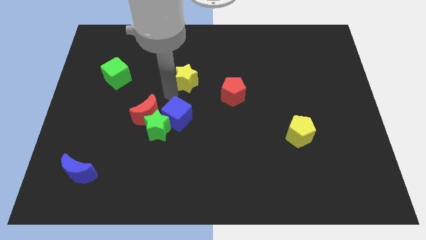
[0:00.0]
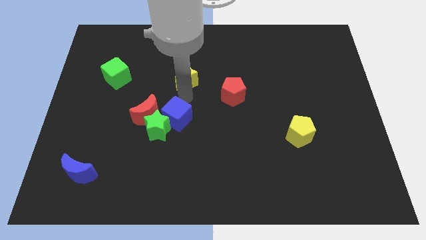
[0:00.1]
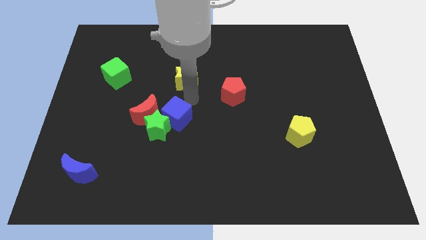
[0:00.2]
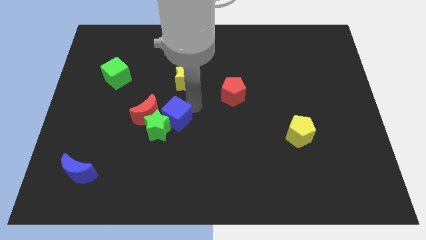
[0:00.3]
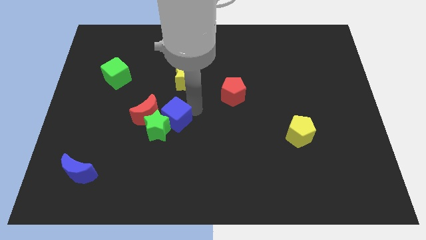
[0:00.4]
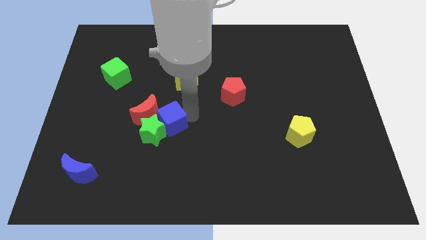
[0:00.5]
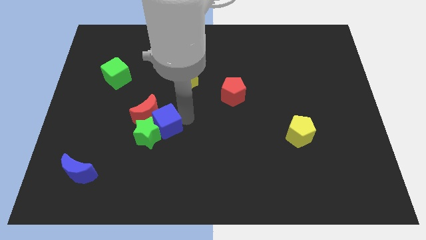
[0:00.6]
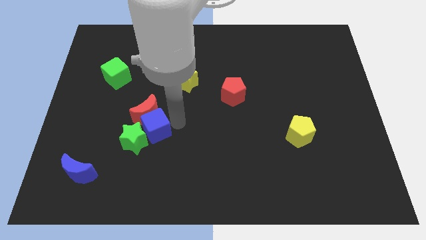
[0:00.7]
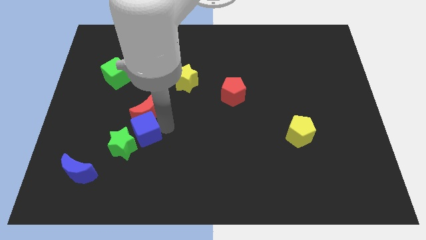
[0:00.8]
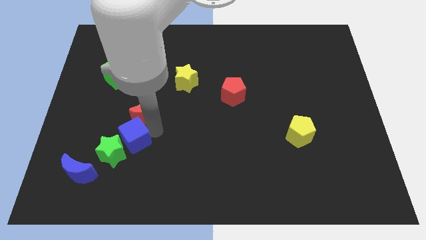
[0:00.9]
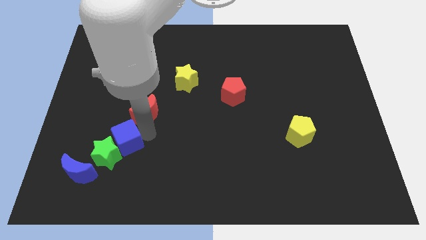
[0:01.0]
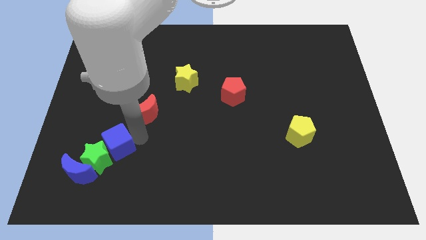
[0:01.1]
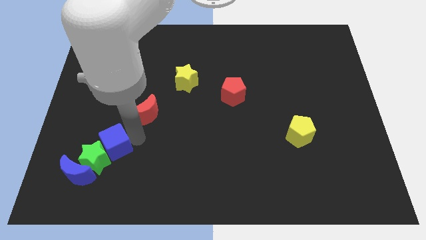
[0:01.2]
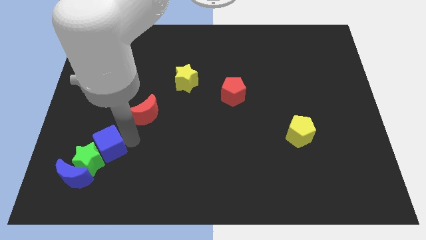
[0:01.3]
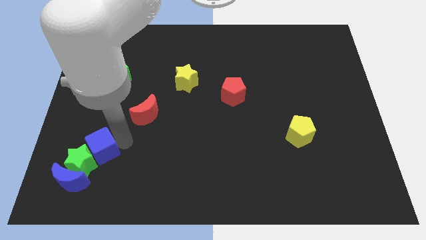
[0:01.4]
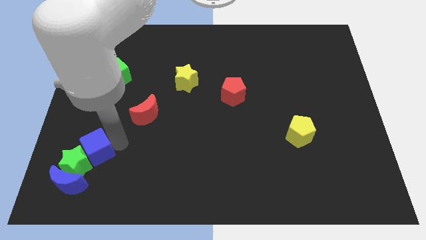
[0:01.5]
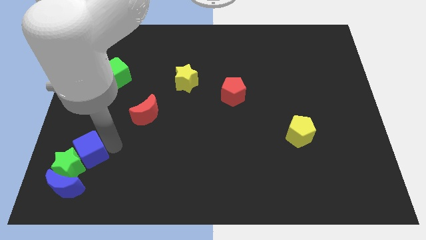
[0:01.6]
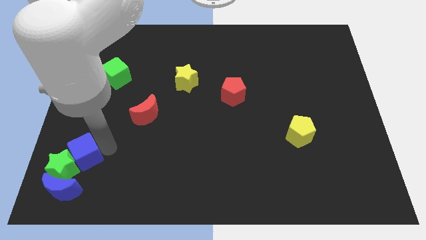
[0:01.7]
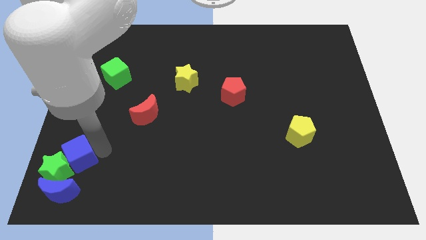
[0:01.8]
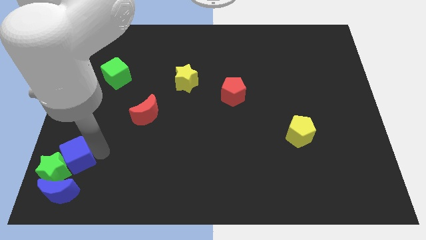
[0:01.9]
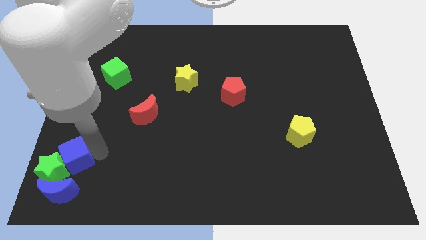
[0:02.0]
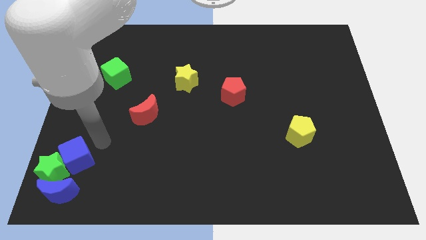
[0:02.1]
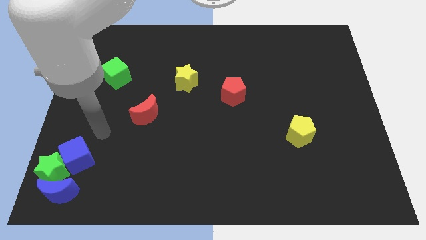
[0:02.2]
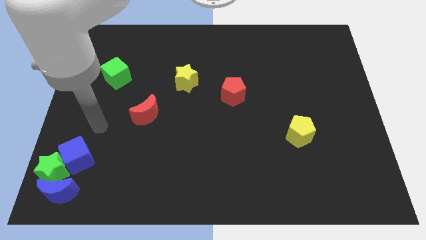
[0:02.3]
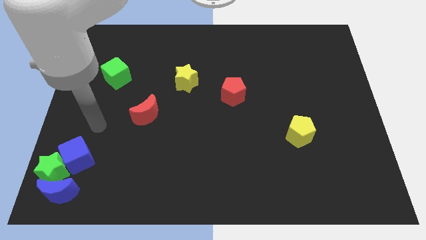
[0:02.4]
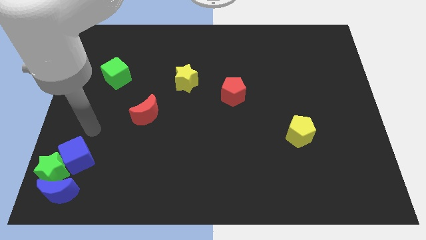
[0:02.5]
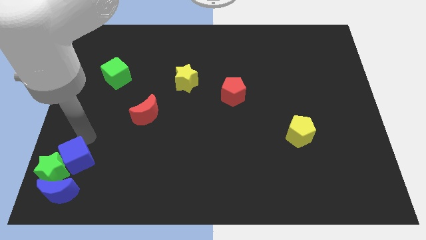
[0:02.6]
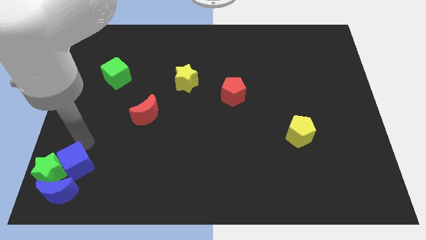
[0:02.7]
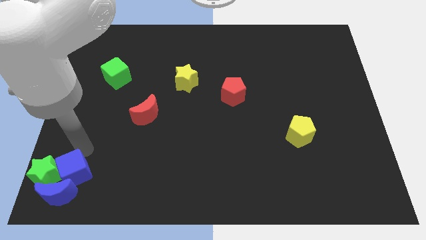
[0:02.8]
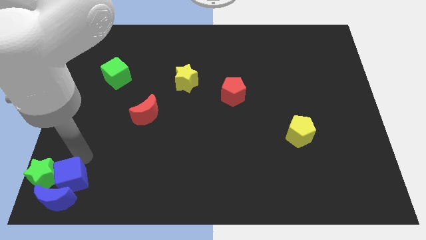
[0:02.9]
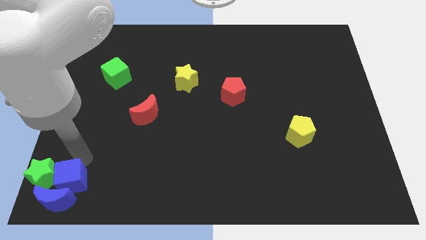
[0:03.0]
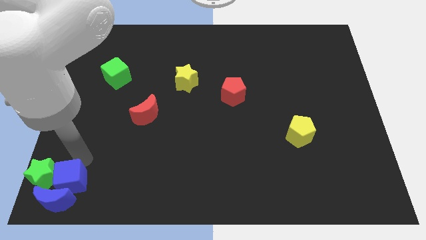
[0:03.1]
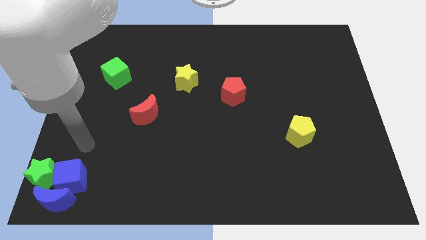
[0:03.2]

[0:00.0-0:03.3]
push both the blue blocks and green star to the bottom left corner of the board

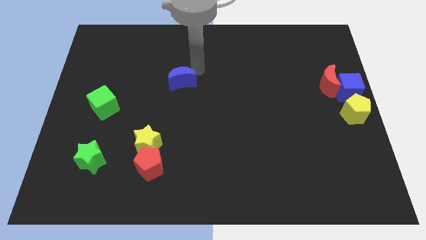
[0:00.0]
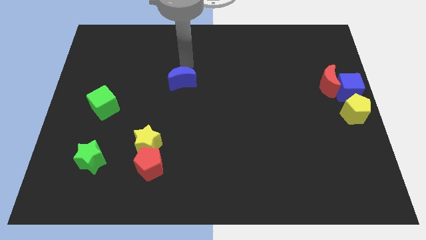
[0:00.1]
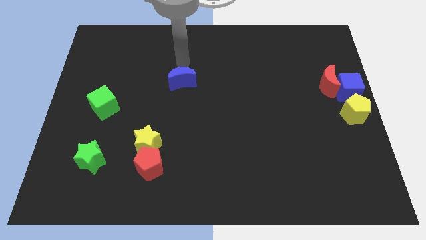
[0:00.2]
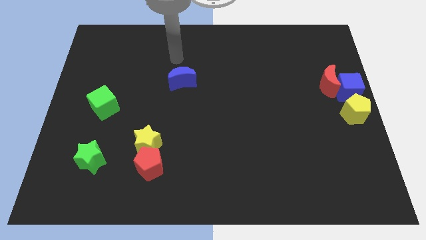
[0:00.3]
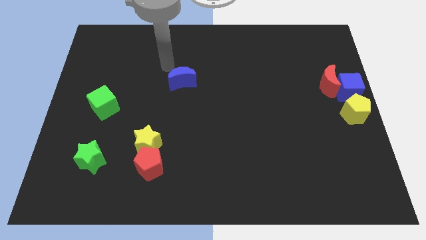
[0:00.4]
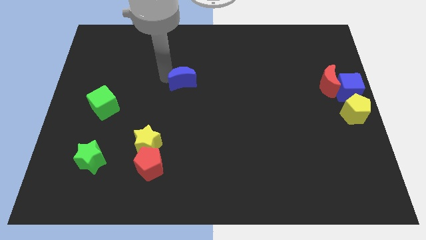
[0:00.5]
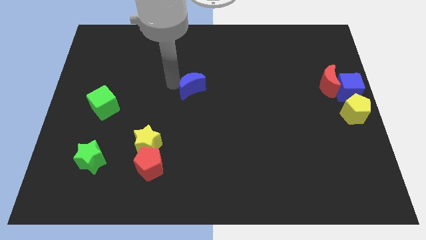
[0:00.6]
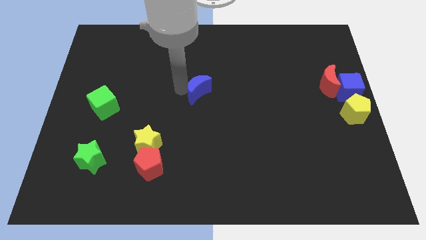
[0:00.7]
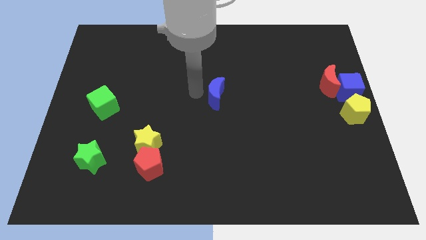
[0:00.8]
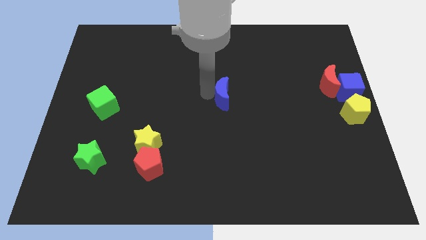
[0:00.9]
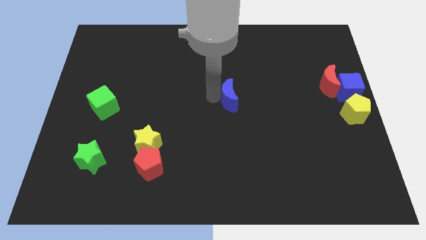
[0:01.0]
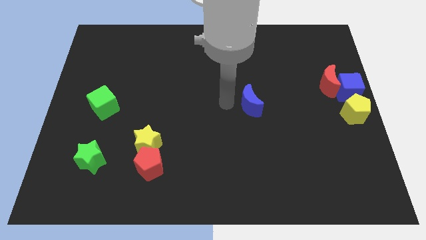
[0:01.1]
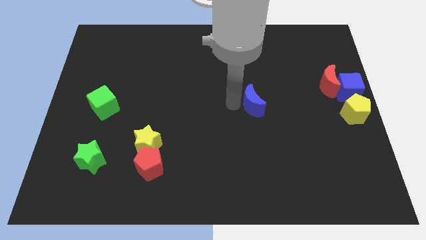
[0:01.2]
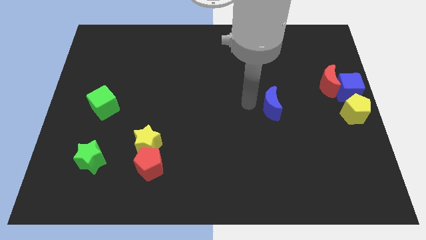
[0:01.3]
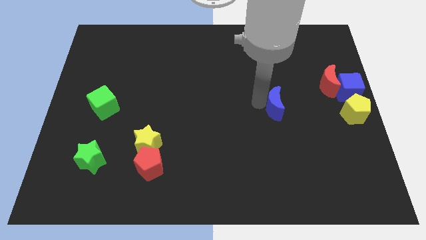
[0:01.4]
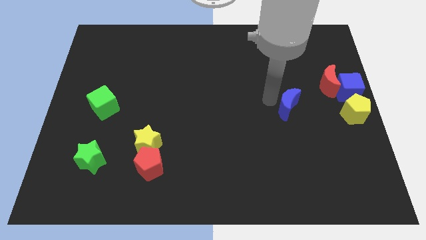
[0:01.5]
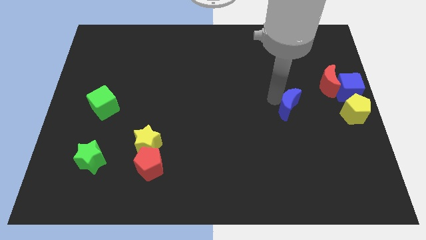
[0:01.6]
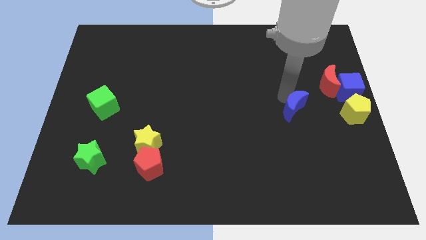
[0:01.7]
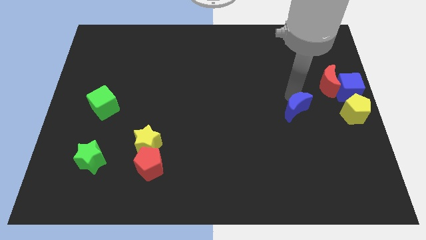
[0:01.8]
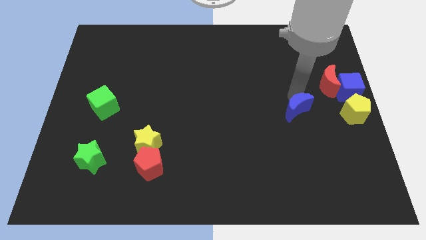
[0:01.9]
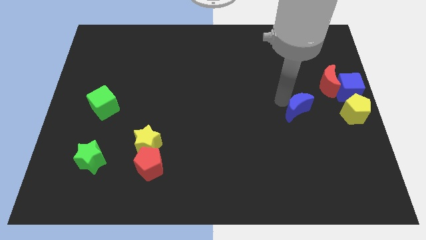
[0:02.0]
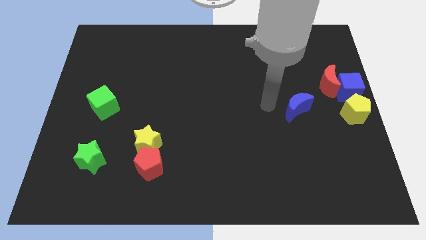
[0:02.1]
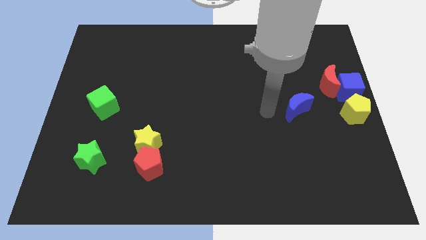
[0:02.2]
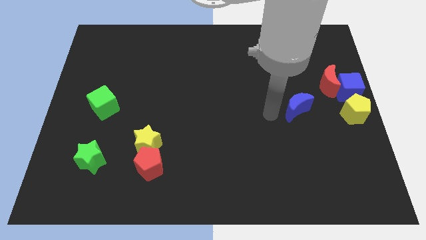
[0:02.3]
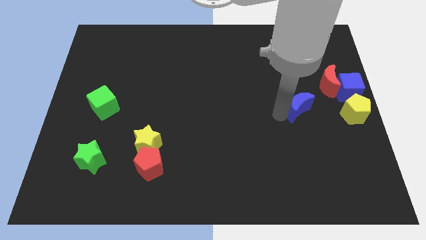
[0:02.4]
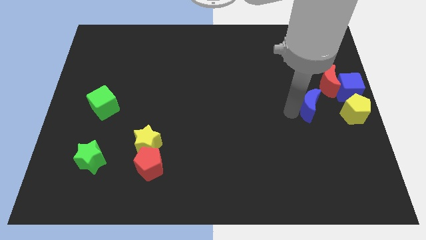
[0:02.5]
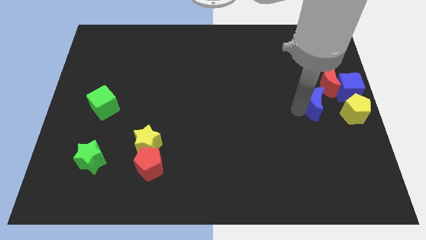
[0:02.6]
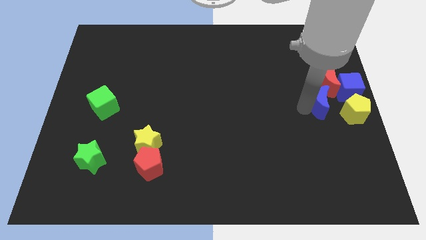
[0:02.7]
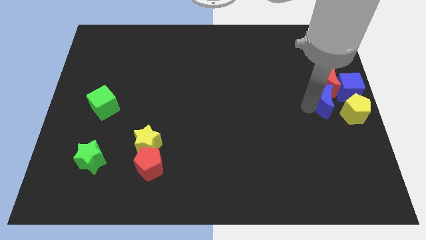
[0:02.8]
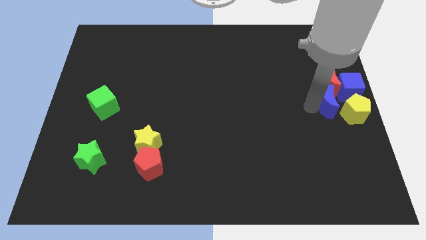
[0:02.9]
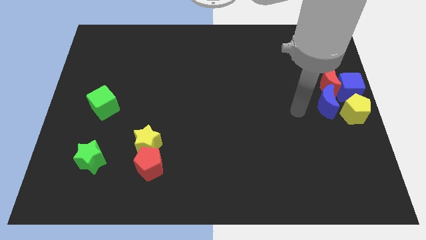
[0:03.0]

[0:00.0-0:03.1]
move blue crescent below red moon

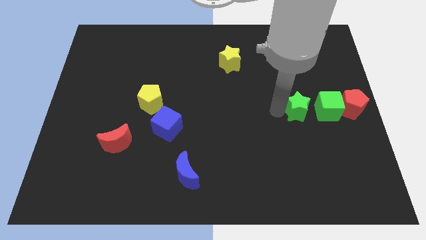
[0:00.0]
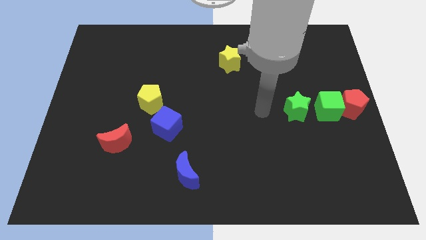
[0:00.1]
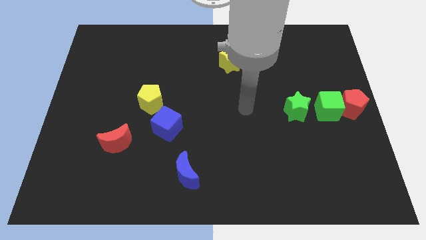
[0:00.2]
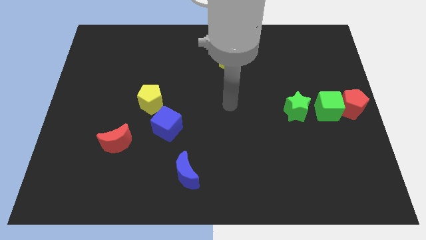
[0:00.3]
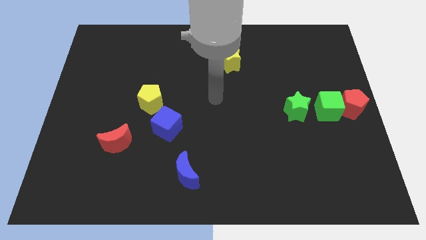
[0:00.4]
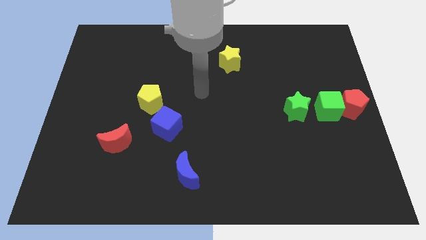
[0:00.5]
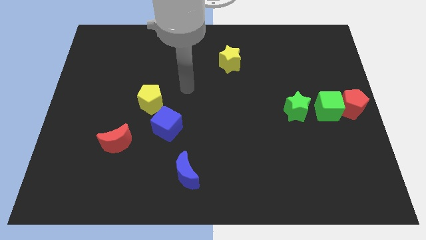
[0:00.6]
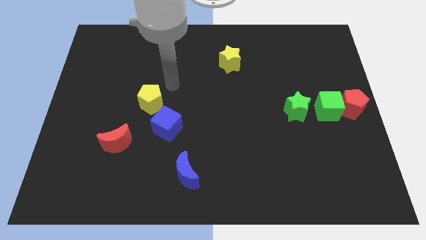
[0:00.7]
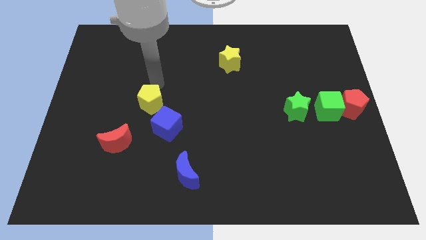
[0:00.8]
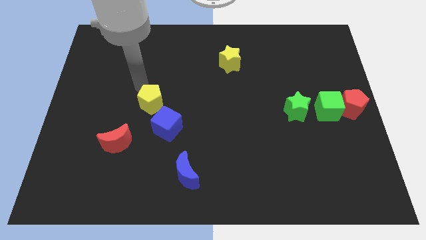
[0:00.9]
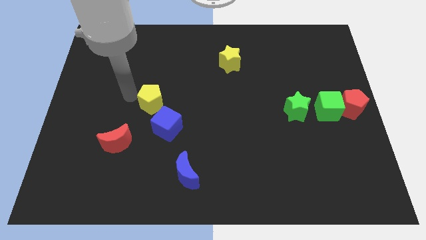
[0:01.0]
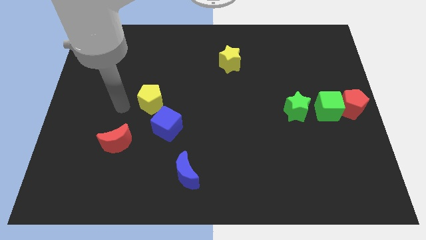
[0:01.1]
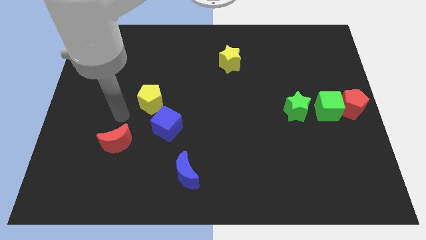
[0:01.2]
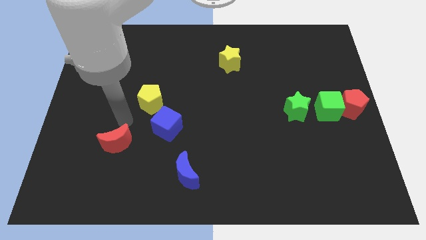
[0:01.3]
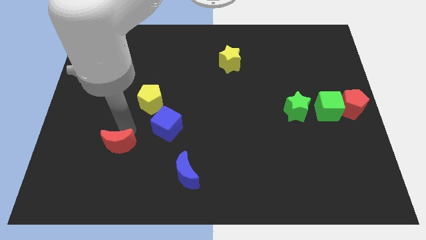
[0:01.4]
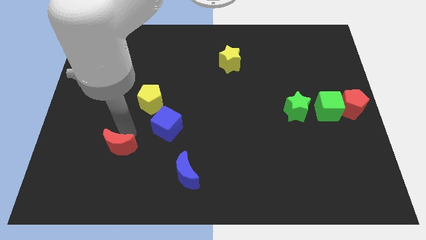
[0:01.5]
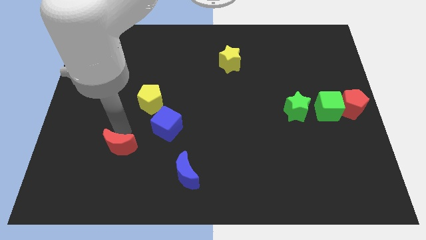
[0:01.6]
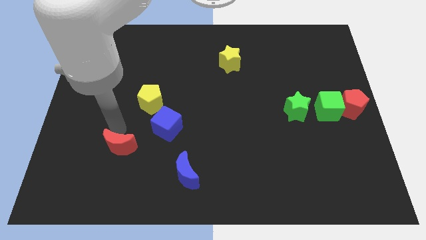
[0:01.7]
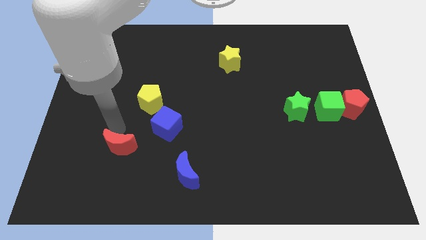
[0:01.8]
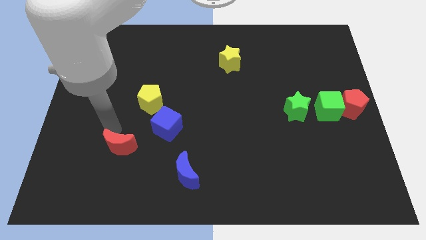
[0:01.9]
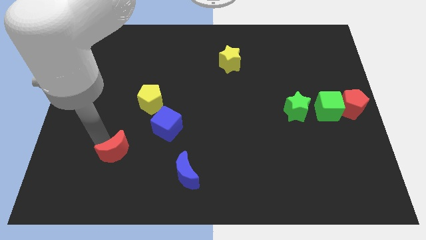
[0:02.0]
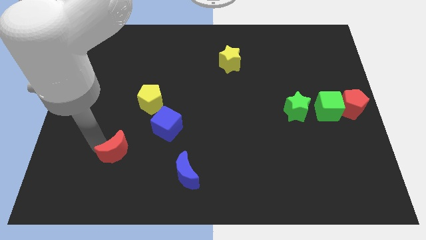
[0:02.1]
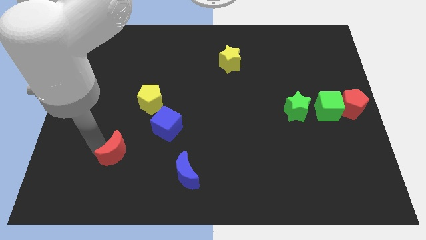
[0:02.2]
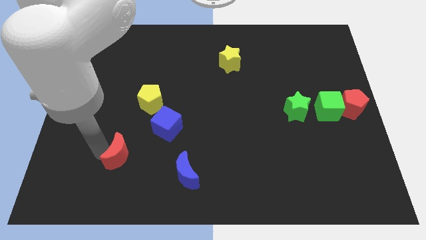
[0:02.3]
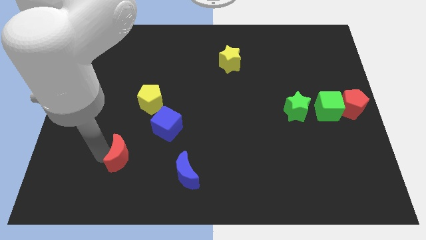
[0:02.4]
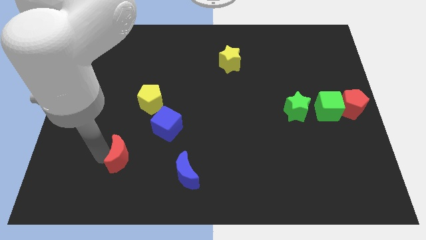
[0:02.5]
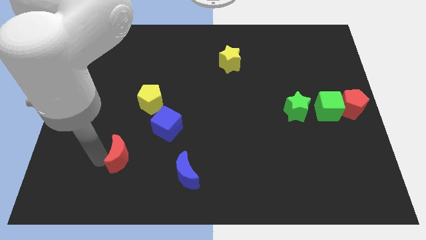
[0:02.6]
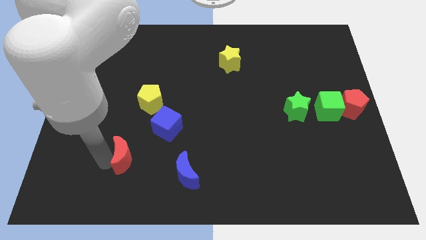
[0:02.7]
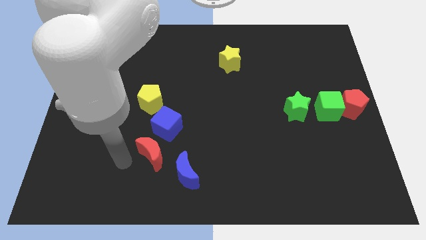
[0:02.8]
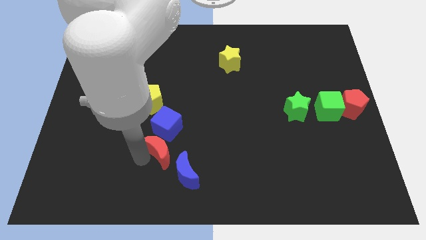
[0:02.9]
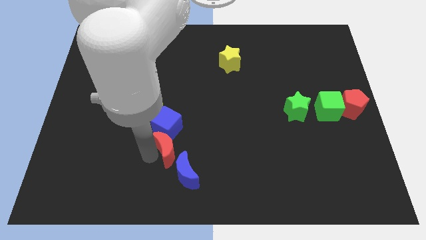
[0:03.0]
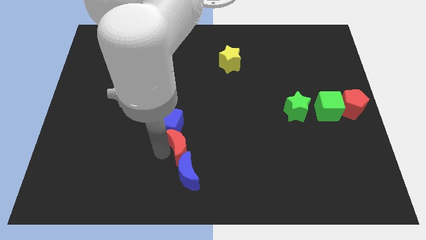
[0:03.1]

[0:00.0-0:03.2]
place the red moon down to the blue cube
